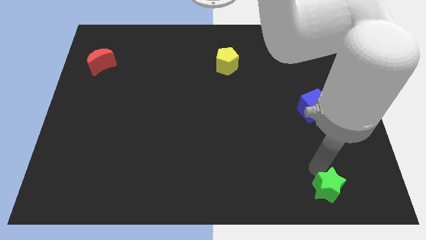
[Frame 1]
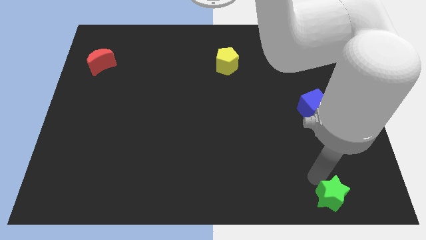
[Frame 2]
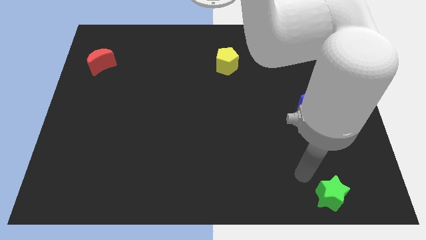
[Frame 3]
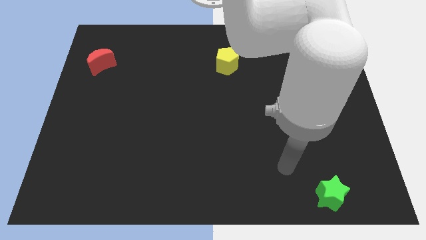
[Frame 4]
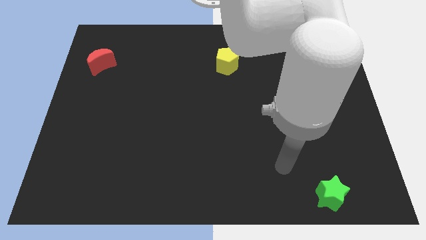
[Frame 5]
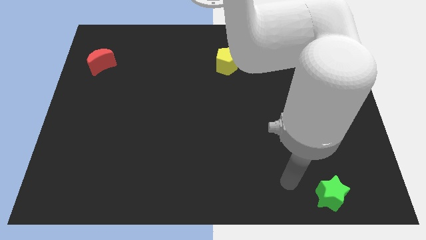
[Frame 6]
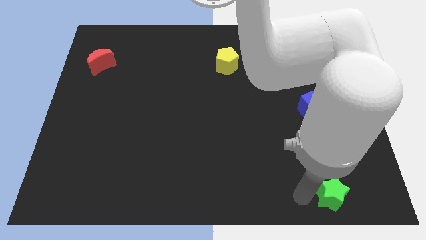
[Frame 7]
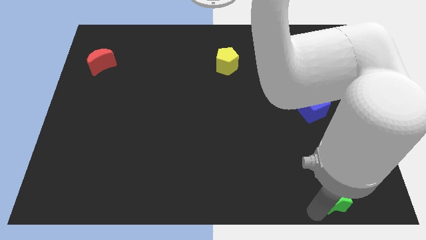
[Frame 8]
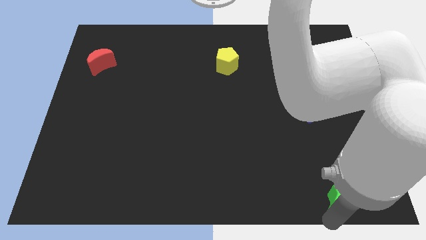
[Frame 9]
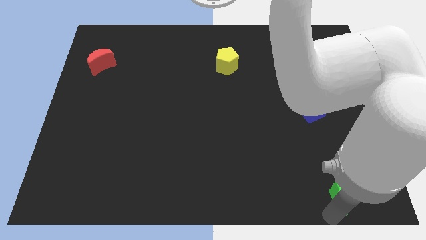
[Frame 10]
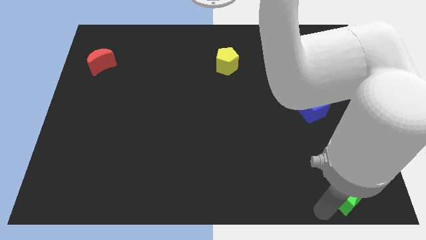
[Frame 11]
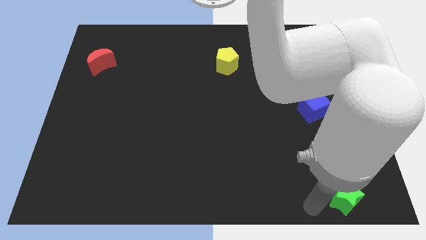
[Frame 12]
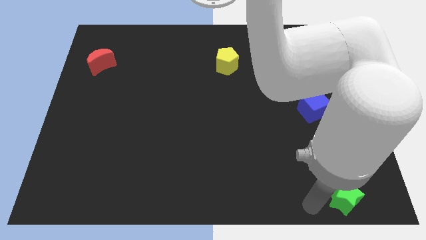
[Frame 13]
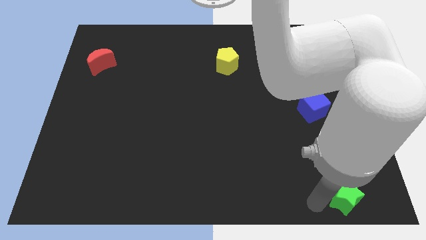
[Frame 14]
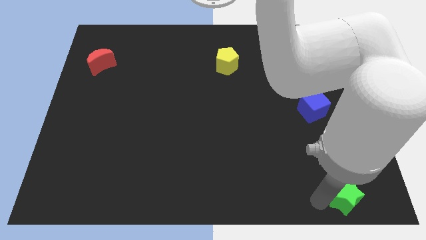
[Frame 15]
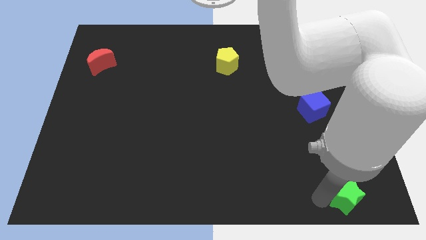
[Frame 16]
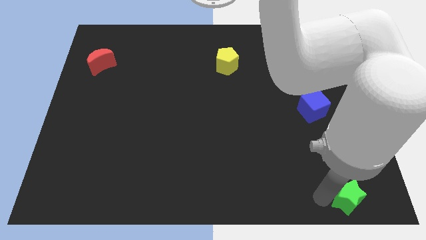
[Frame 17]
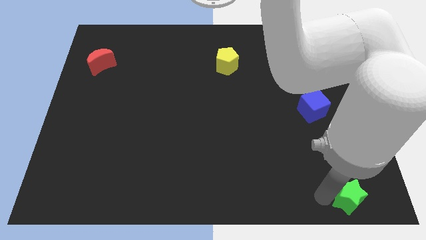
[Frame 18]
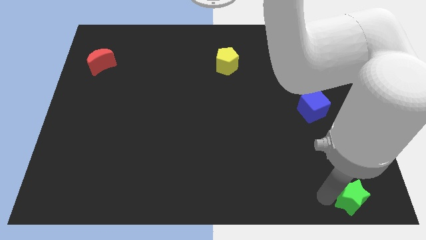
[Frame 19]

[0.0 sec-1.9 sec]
push the green star to the bottom right of the board

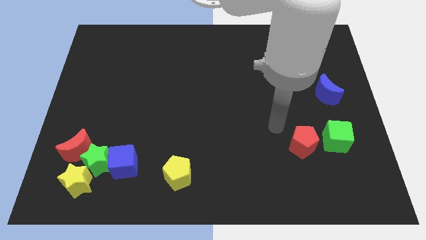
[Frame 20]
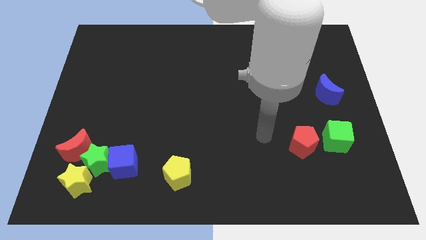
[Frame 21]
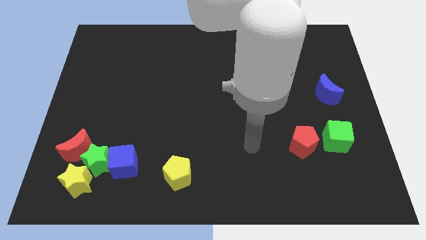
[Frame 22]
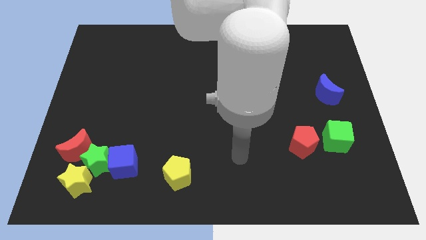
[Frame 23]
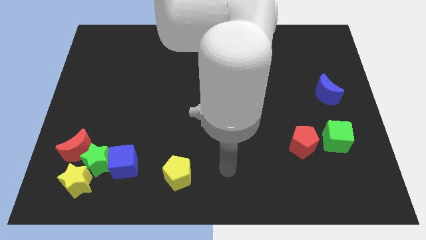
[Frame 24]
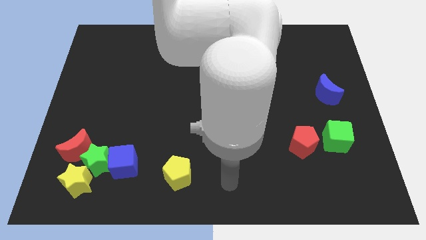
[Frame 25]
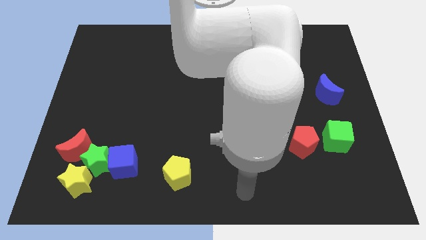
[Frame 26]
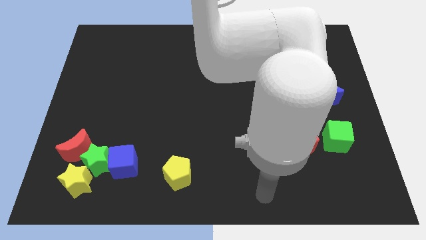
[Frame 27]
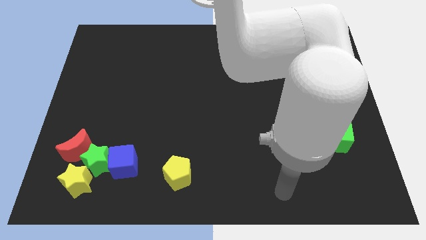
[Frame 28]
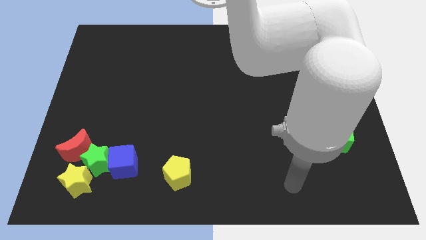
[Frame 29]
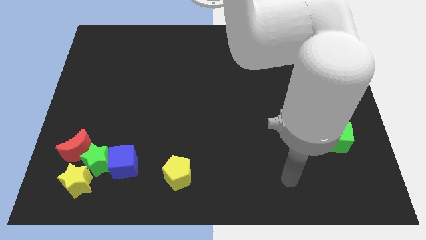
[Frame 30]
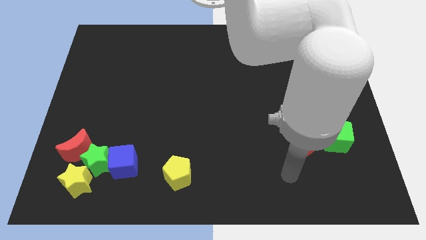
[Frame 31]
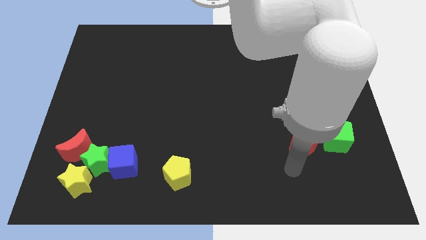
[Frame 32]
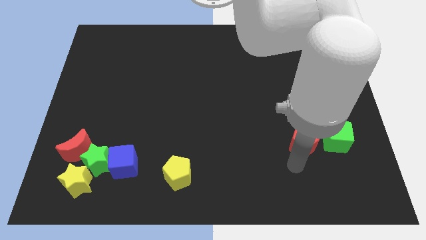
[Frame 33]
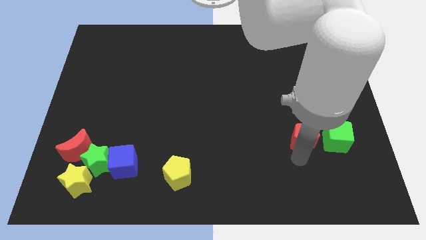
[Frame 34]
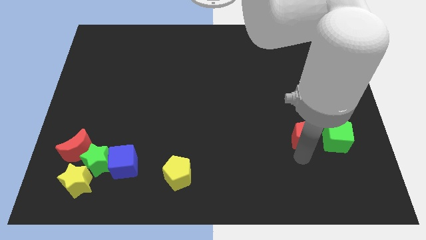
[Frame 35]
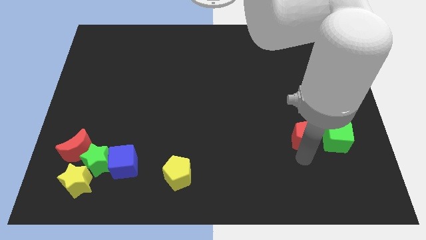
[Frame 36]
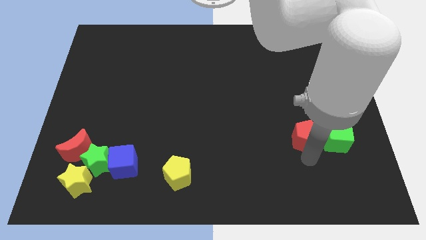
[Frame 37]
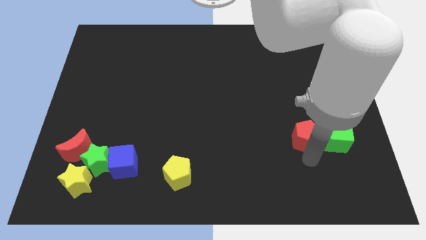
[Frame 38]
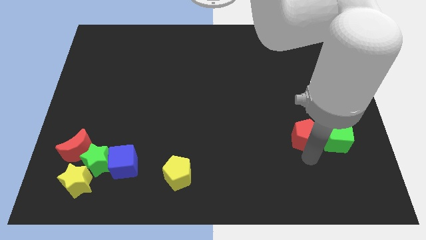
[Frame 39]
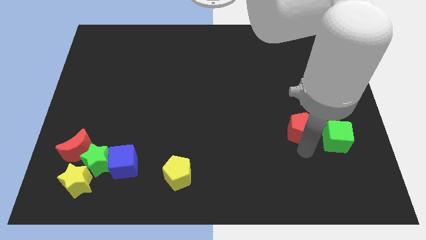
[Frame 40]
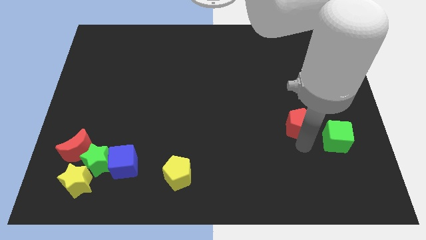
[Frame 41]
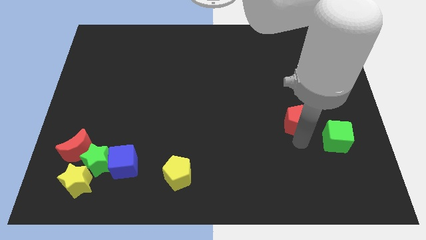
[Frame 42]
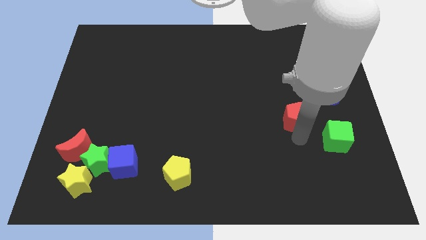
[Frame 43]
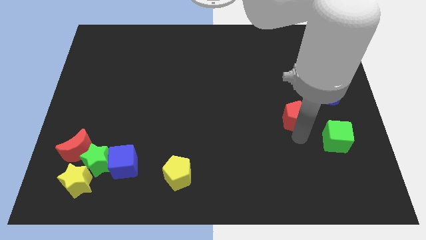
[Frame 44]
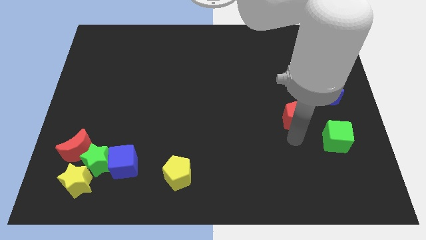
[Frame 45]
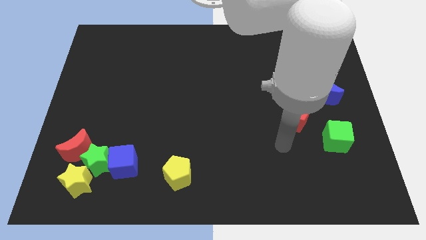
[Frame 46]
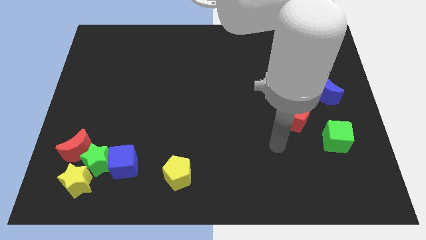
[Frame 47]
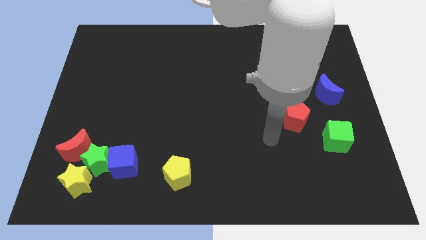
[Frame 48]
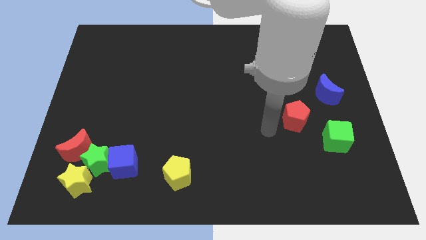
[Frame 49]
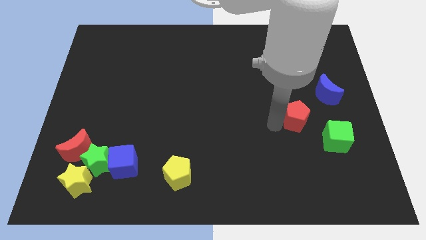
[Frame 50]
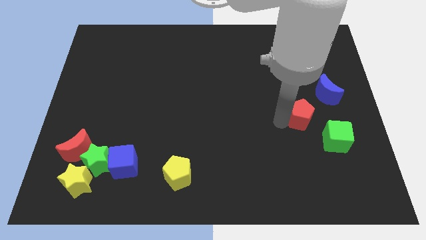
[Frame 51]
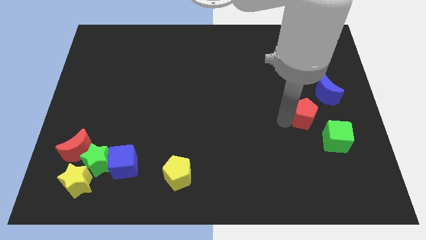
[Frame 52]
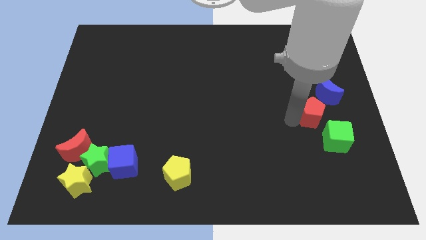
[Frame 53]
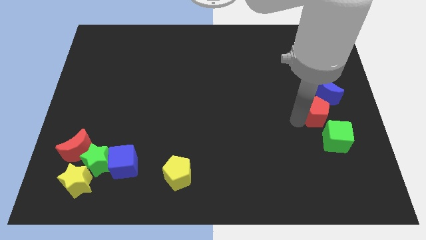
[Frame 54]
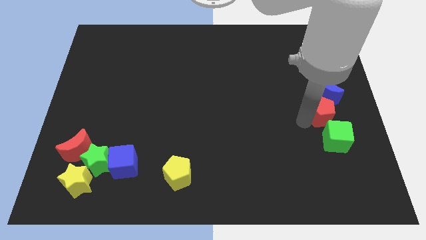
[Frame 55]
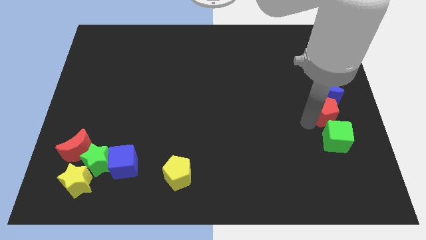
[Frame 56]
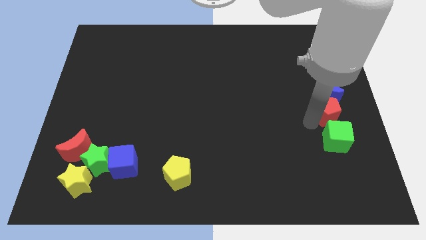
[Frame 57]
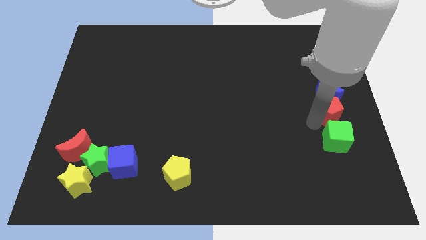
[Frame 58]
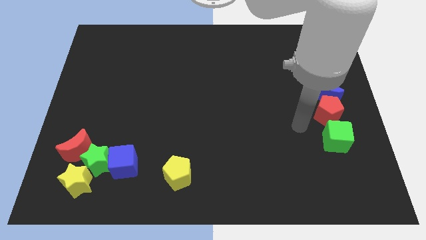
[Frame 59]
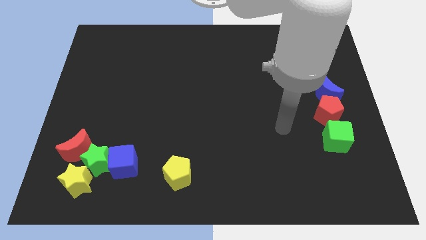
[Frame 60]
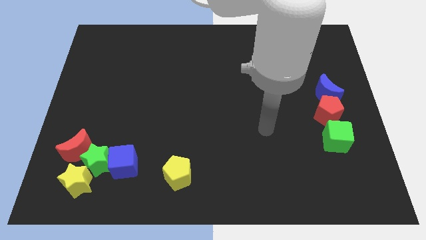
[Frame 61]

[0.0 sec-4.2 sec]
move red pentagon between the green cube and blue moon

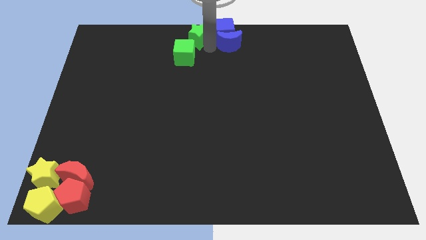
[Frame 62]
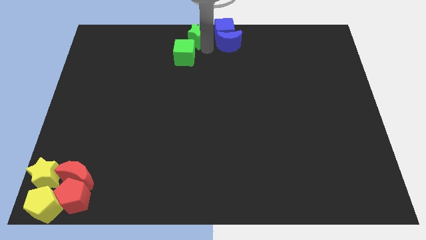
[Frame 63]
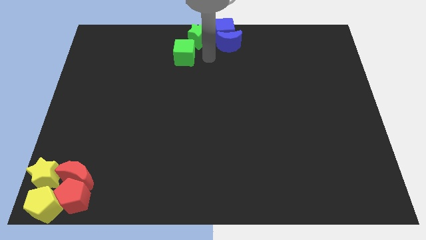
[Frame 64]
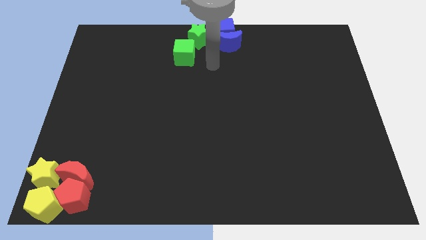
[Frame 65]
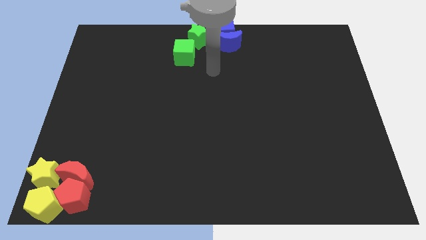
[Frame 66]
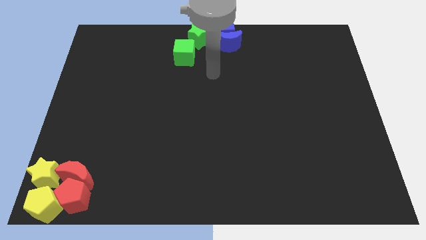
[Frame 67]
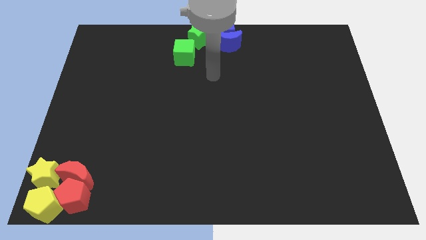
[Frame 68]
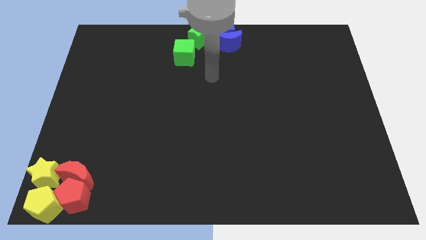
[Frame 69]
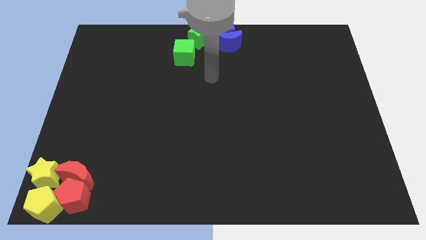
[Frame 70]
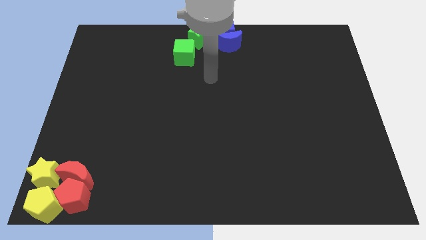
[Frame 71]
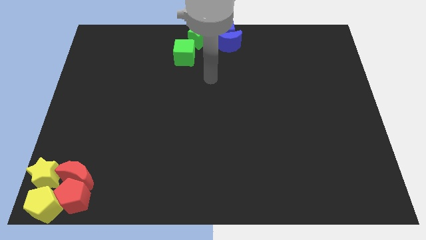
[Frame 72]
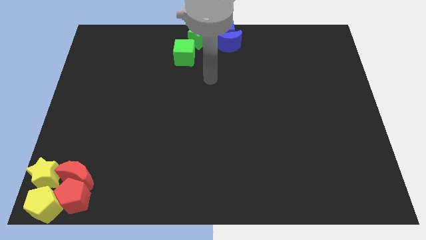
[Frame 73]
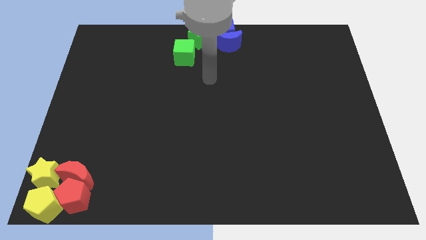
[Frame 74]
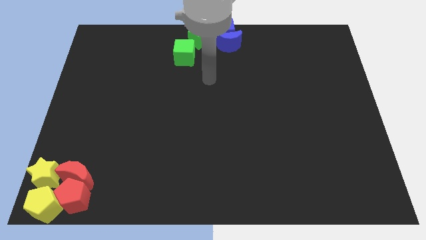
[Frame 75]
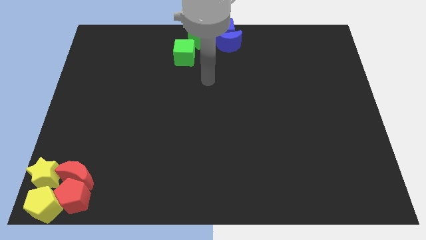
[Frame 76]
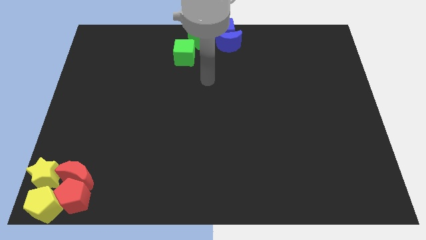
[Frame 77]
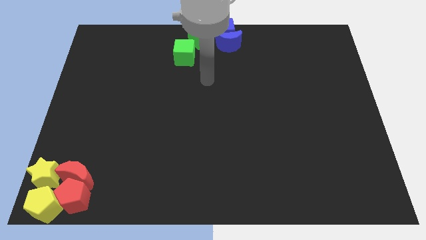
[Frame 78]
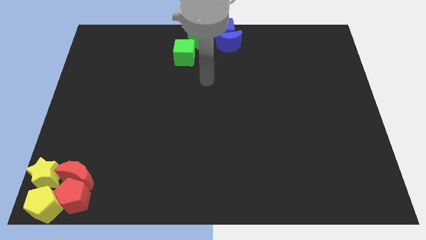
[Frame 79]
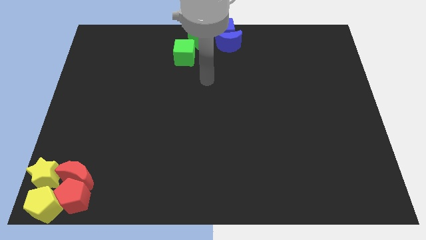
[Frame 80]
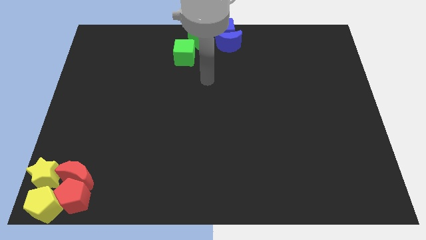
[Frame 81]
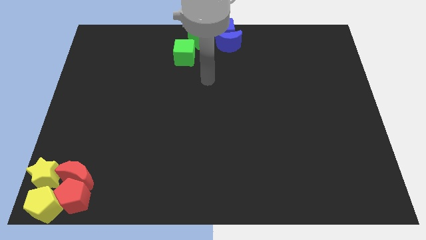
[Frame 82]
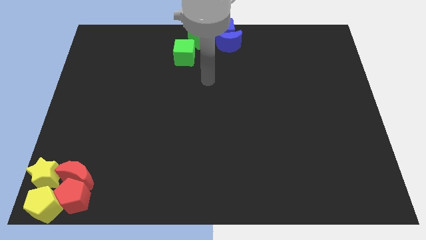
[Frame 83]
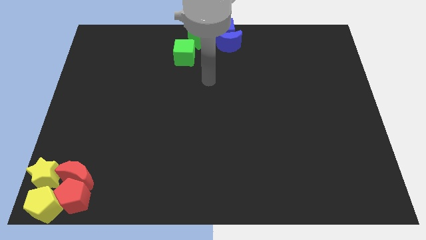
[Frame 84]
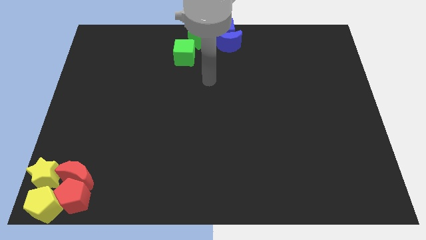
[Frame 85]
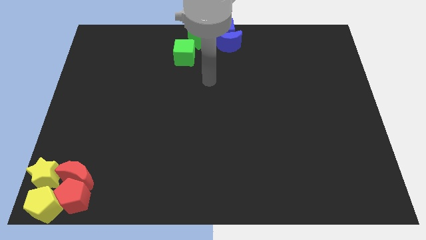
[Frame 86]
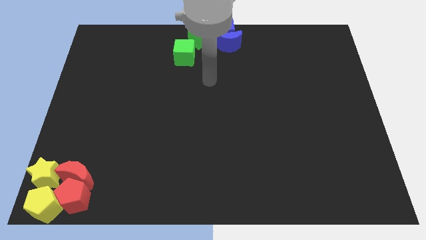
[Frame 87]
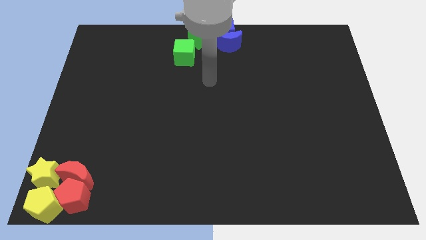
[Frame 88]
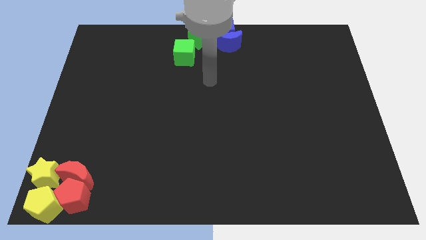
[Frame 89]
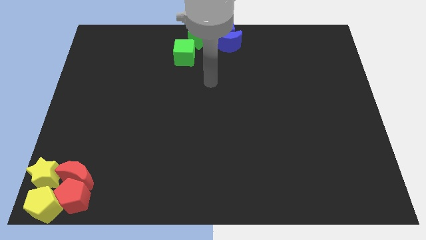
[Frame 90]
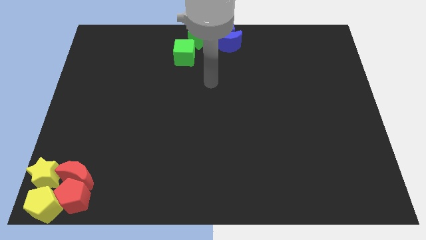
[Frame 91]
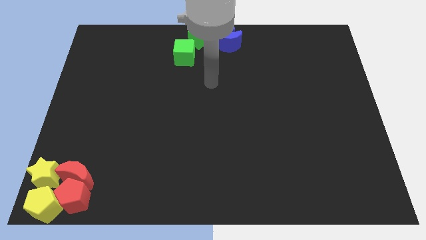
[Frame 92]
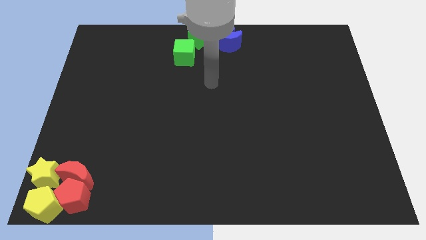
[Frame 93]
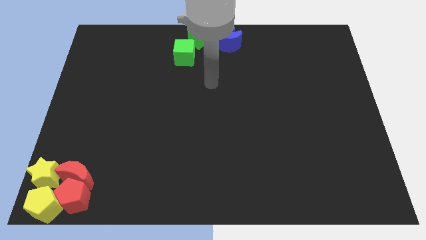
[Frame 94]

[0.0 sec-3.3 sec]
move green star slightly up
